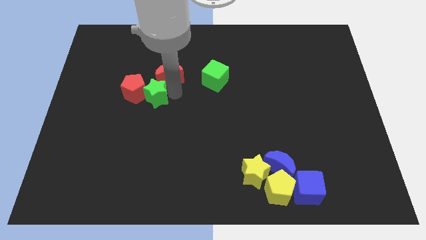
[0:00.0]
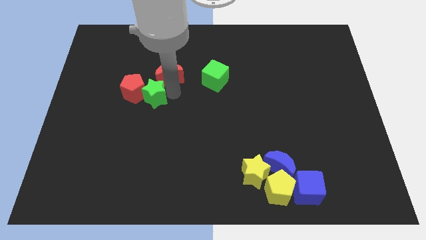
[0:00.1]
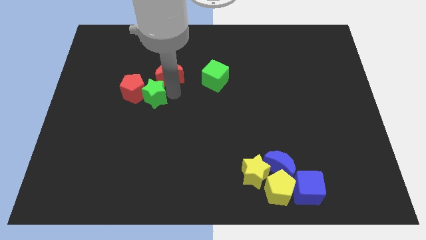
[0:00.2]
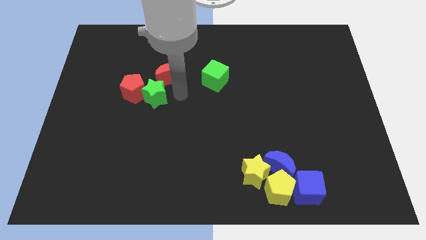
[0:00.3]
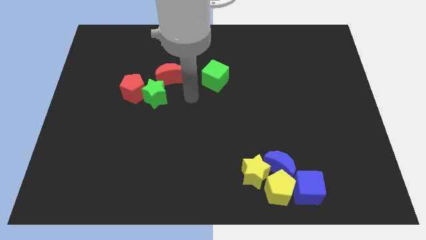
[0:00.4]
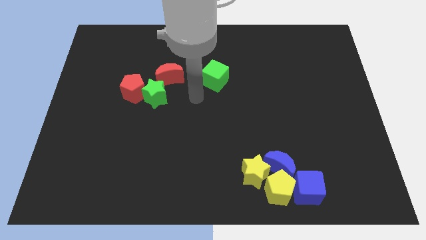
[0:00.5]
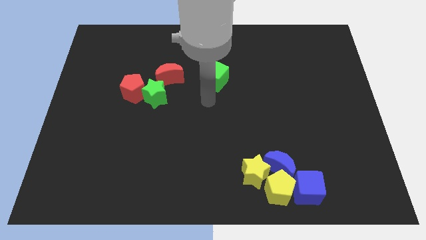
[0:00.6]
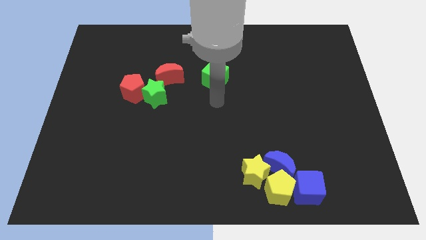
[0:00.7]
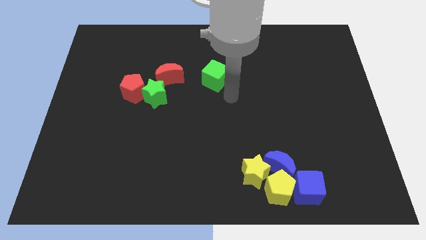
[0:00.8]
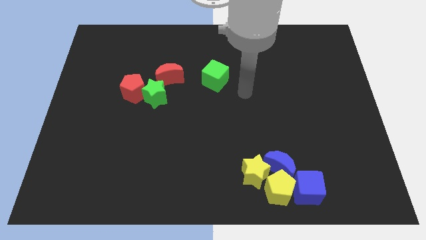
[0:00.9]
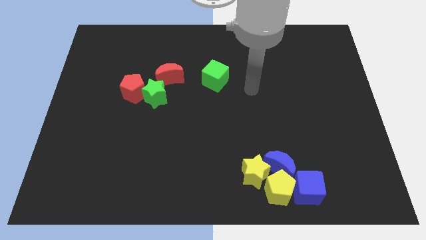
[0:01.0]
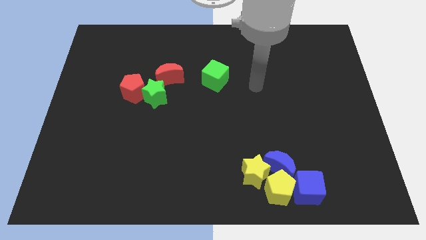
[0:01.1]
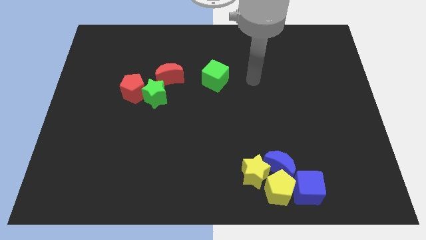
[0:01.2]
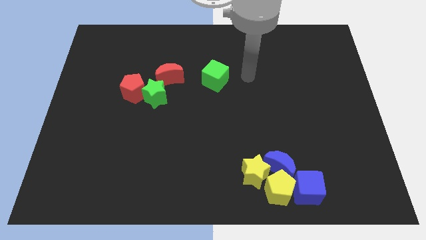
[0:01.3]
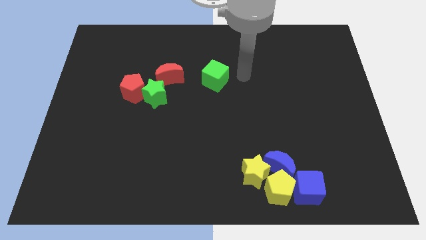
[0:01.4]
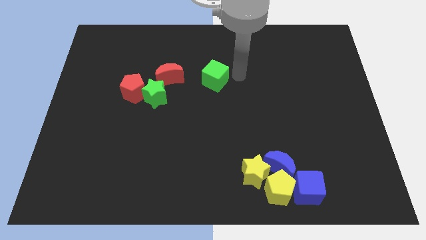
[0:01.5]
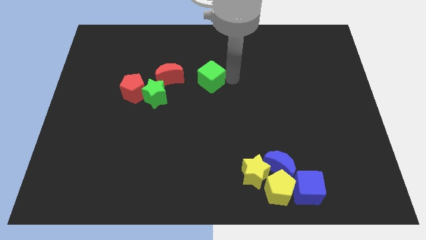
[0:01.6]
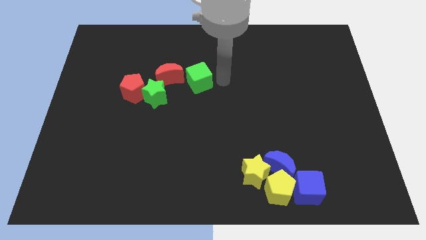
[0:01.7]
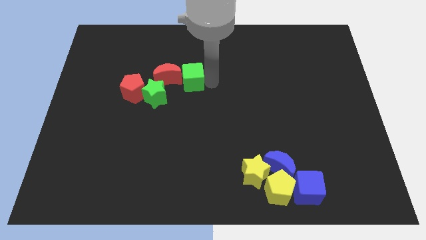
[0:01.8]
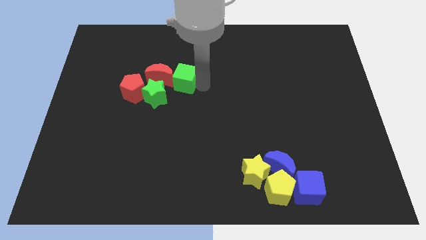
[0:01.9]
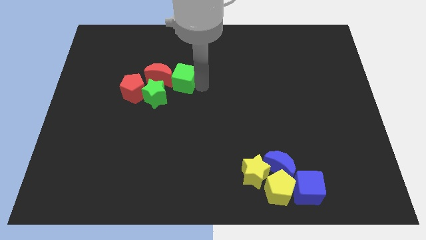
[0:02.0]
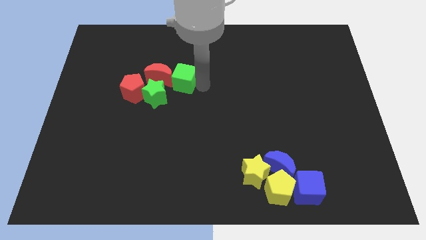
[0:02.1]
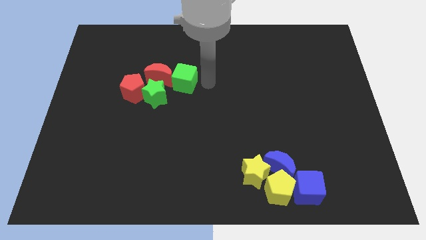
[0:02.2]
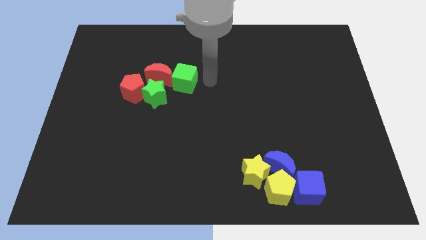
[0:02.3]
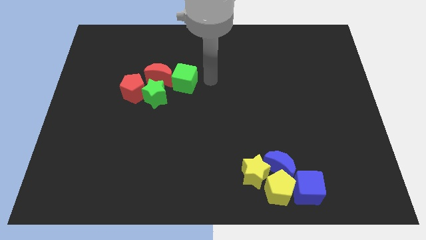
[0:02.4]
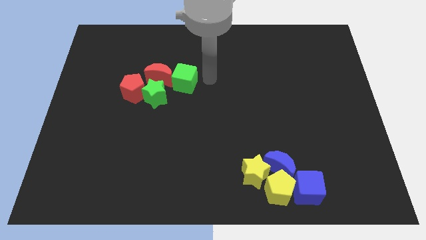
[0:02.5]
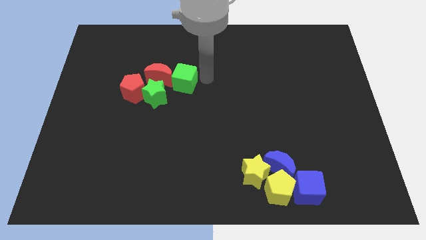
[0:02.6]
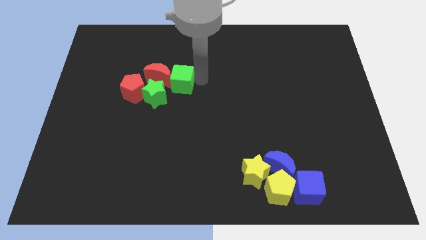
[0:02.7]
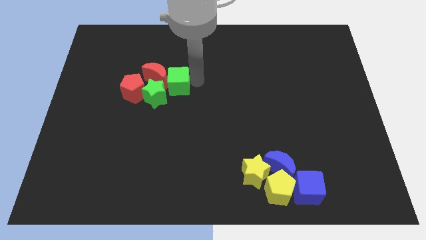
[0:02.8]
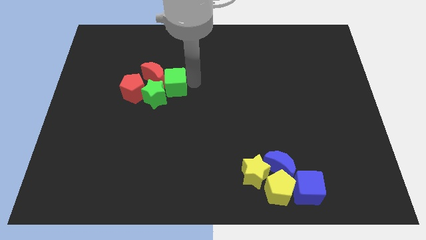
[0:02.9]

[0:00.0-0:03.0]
place the green cube to the right of the red crescent

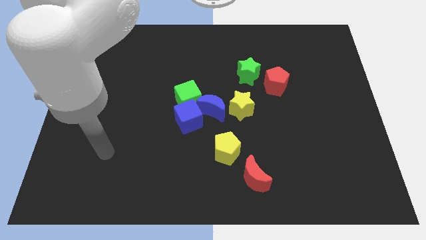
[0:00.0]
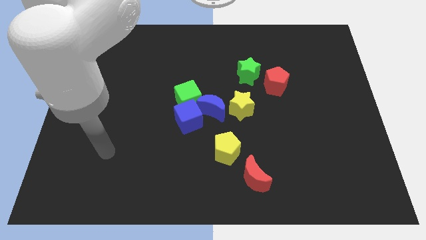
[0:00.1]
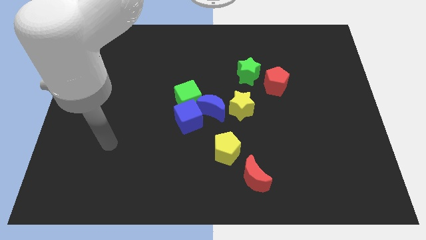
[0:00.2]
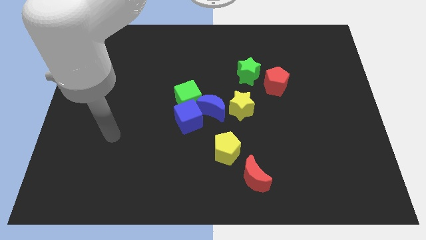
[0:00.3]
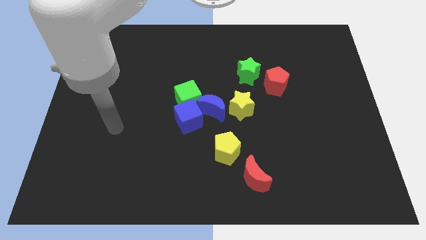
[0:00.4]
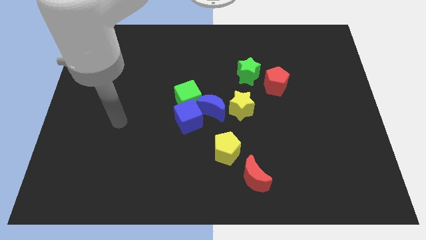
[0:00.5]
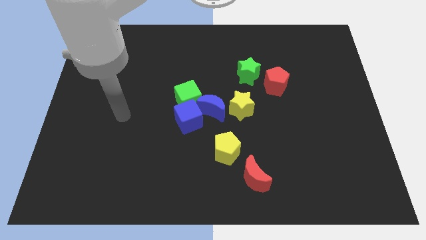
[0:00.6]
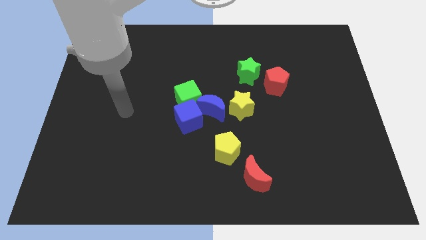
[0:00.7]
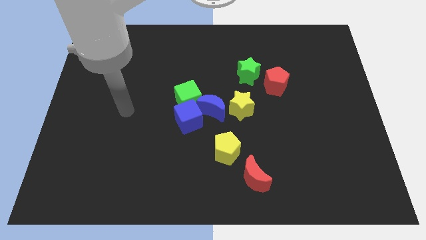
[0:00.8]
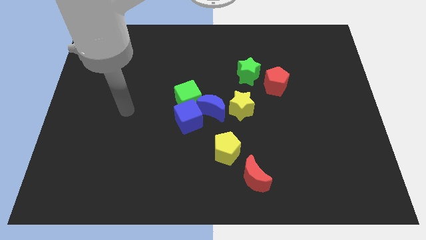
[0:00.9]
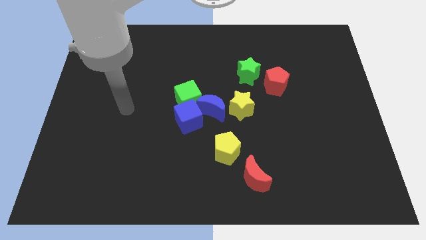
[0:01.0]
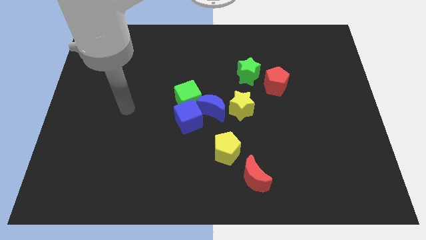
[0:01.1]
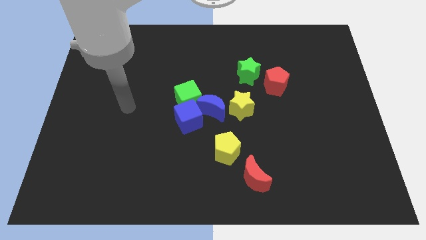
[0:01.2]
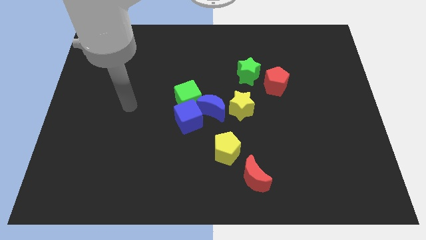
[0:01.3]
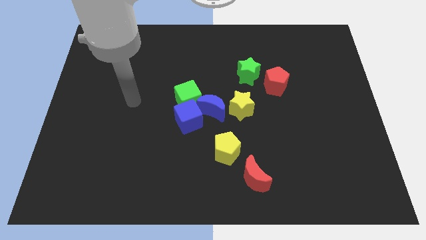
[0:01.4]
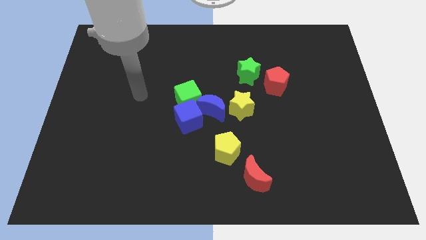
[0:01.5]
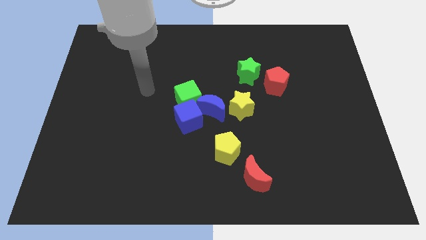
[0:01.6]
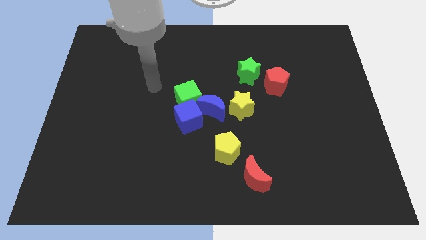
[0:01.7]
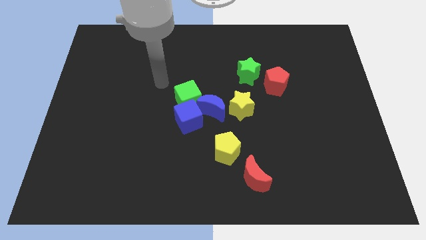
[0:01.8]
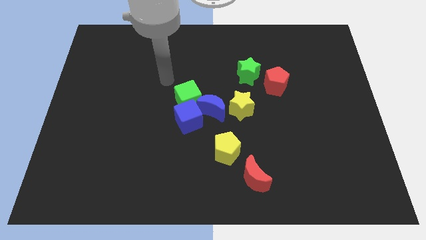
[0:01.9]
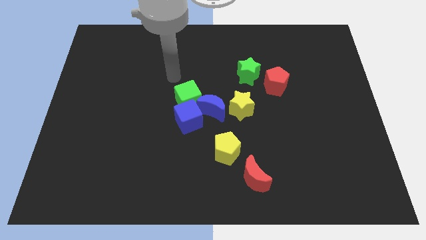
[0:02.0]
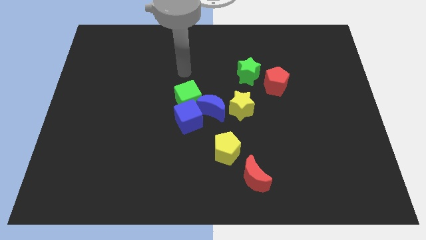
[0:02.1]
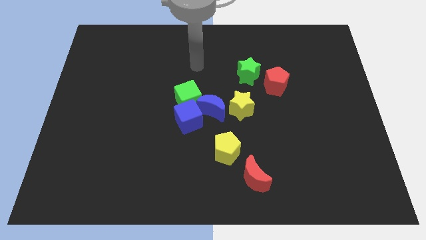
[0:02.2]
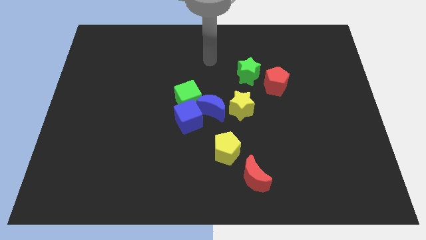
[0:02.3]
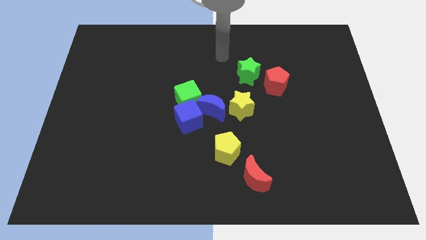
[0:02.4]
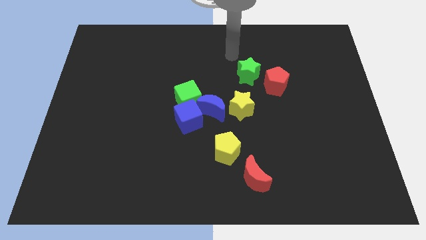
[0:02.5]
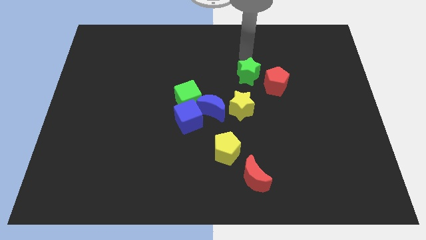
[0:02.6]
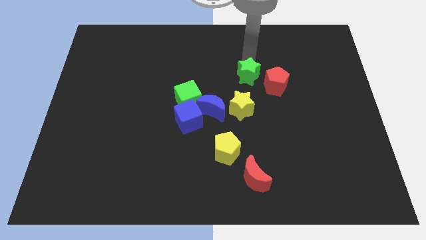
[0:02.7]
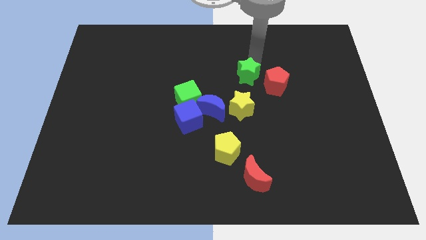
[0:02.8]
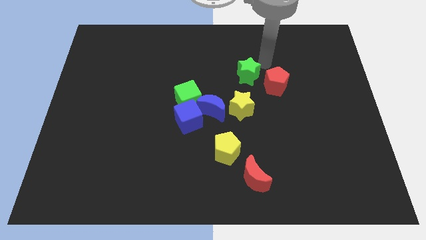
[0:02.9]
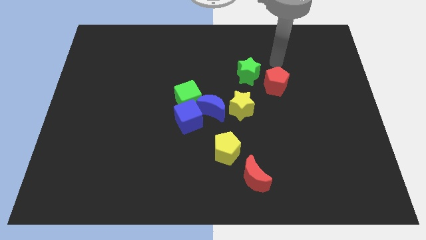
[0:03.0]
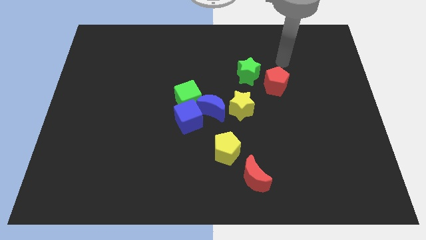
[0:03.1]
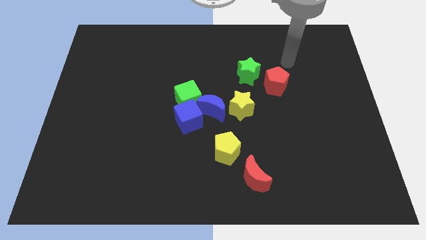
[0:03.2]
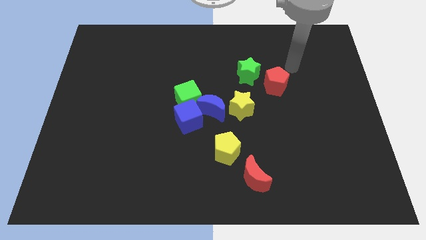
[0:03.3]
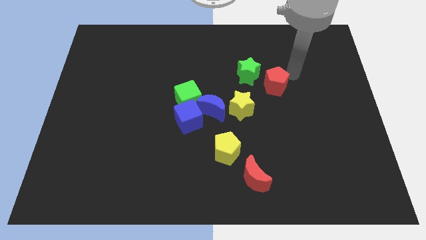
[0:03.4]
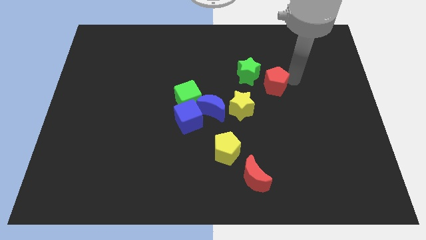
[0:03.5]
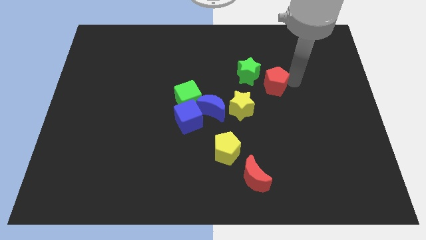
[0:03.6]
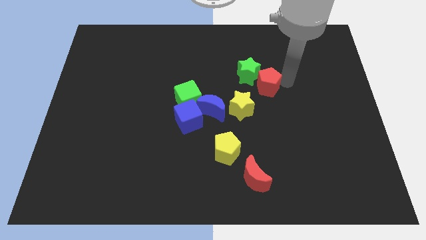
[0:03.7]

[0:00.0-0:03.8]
push the red pentagon into the green star

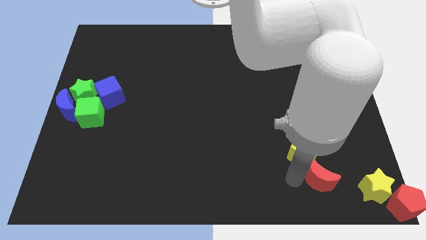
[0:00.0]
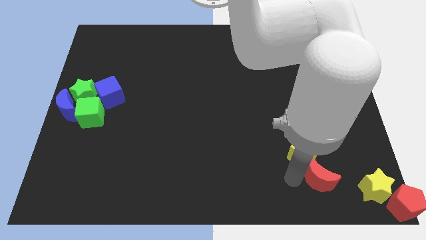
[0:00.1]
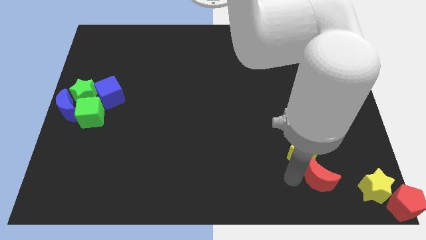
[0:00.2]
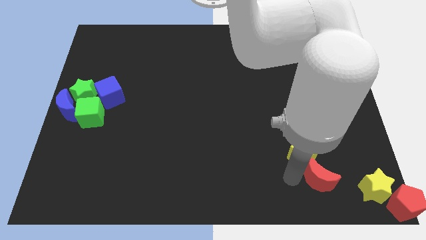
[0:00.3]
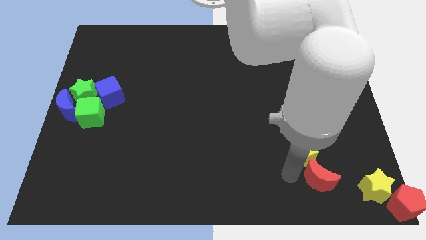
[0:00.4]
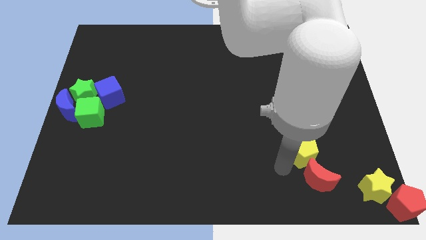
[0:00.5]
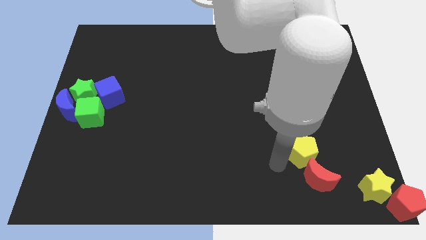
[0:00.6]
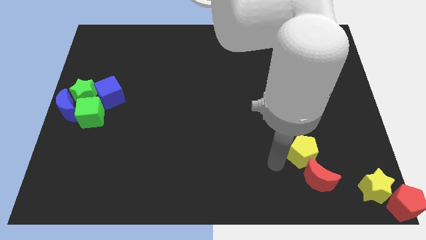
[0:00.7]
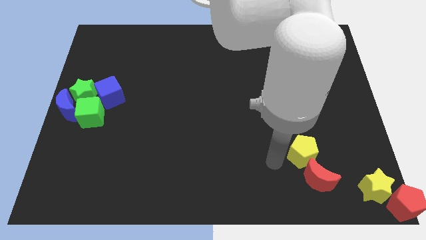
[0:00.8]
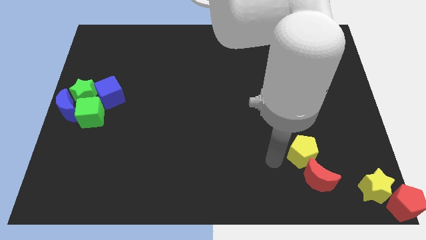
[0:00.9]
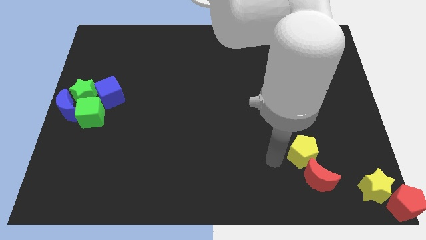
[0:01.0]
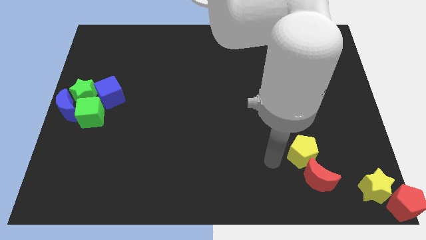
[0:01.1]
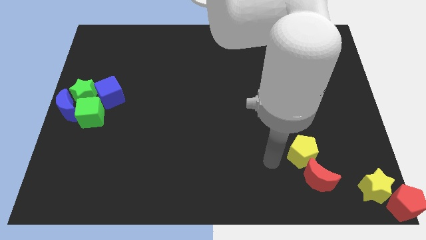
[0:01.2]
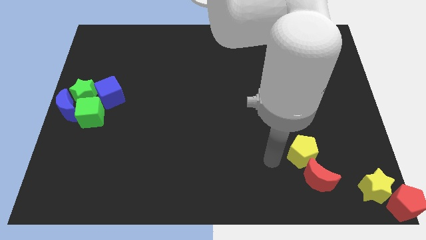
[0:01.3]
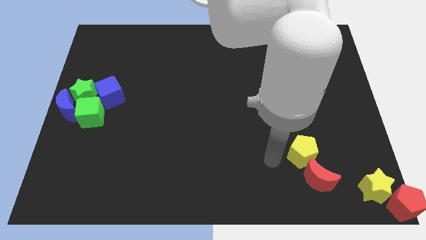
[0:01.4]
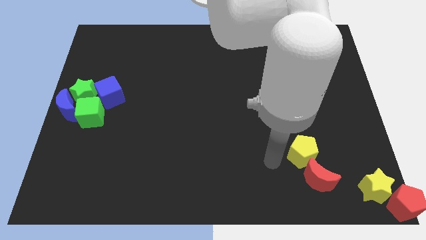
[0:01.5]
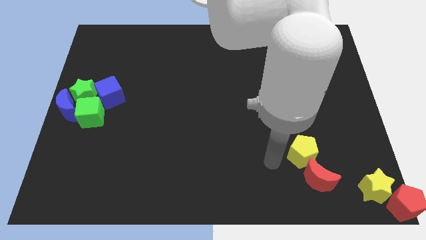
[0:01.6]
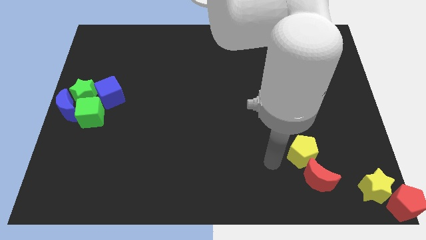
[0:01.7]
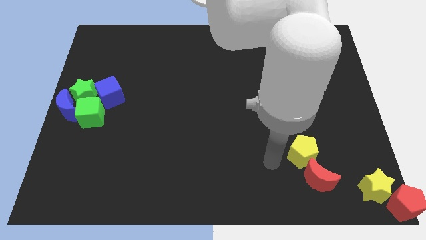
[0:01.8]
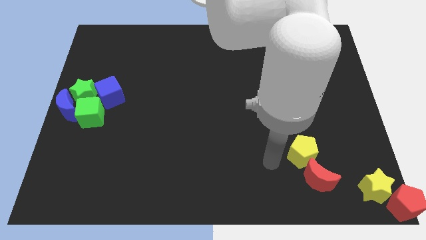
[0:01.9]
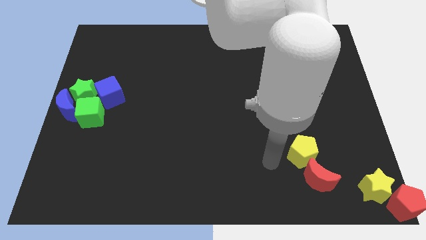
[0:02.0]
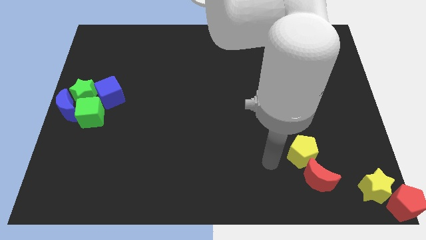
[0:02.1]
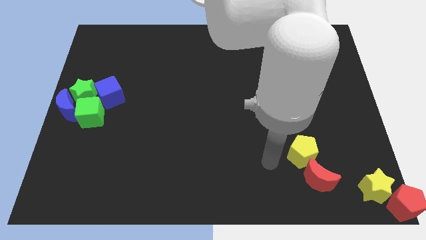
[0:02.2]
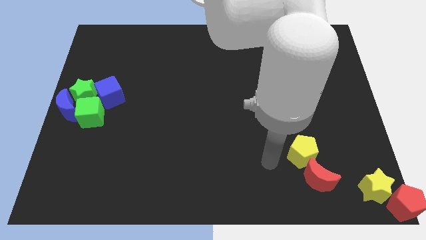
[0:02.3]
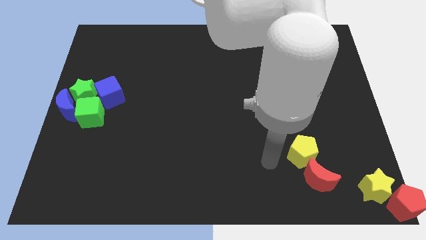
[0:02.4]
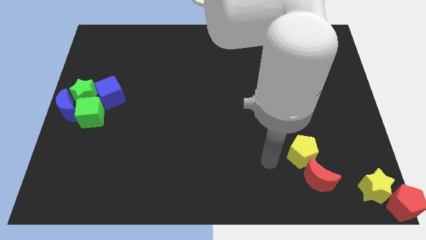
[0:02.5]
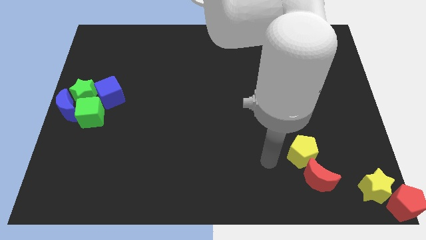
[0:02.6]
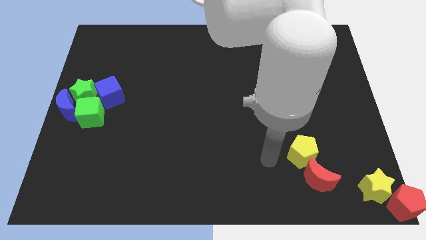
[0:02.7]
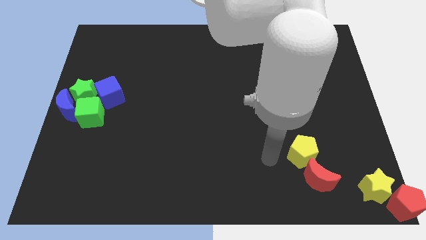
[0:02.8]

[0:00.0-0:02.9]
move your arm left to the yellow pentagon
